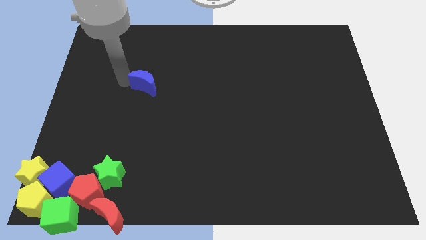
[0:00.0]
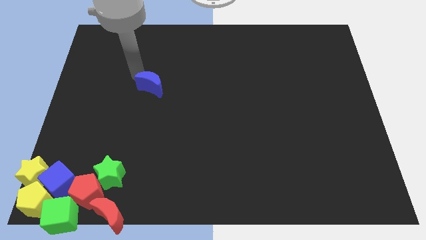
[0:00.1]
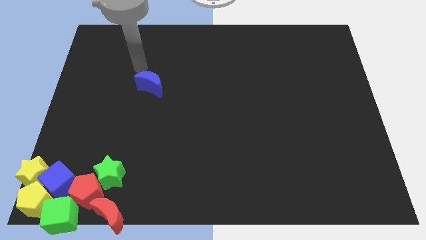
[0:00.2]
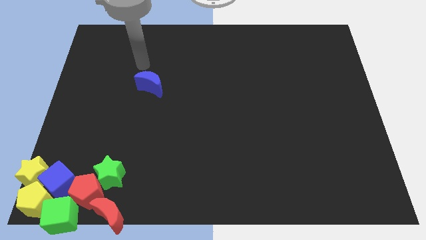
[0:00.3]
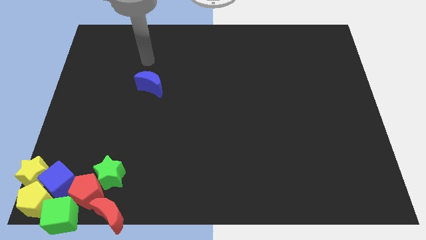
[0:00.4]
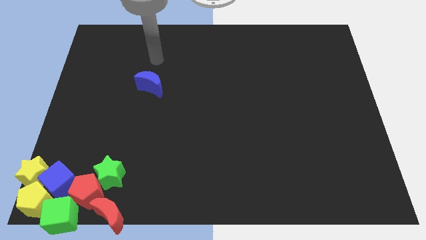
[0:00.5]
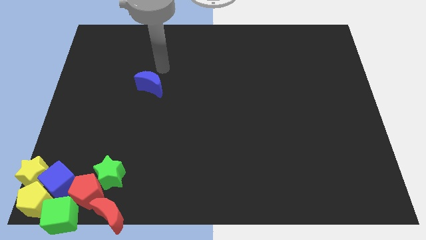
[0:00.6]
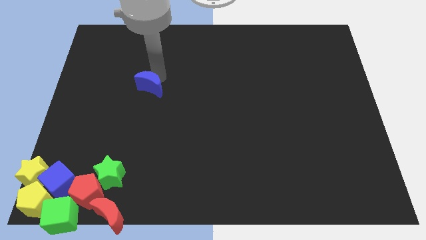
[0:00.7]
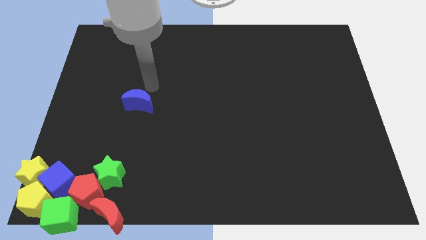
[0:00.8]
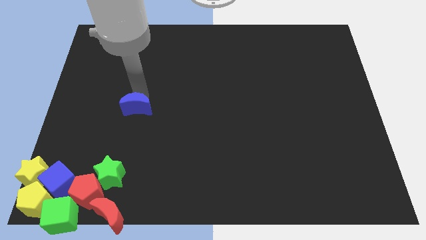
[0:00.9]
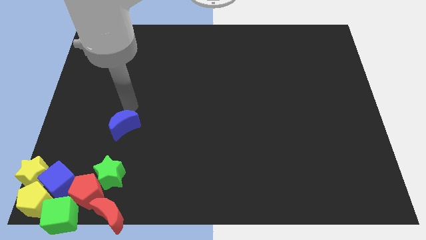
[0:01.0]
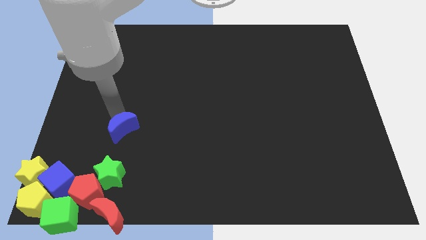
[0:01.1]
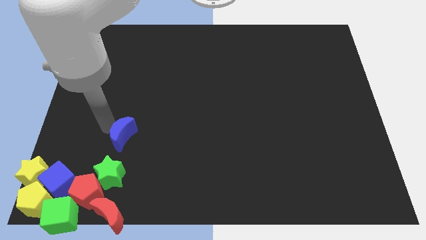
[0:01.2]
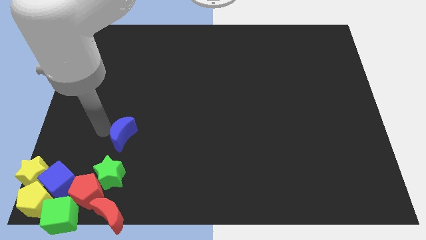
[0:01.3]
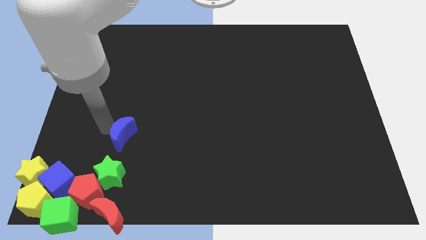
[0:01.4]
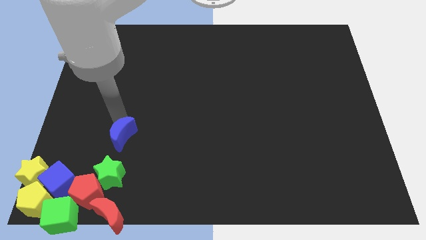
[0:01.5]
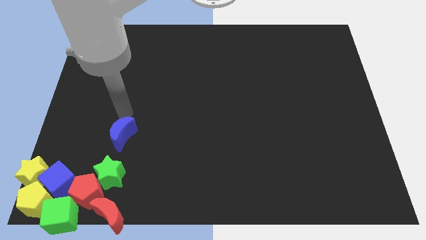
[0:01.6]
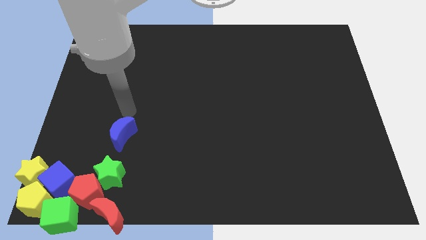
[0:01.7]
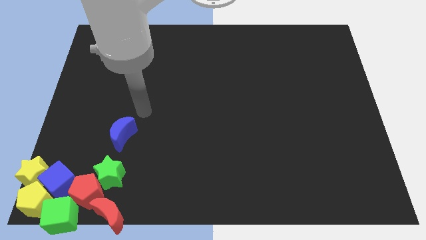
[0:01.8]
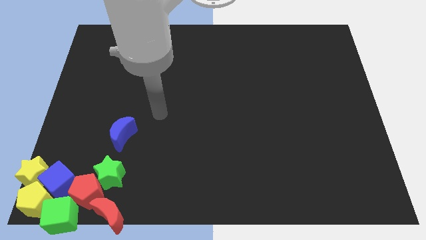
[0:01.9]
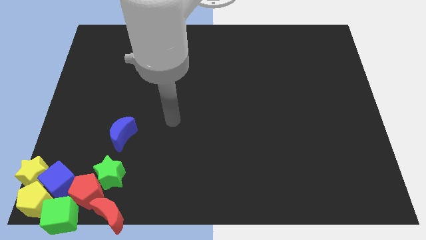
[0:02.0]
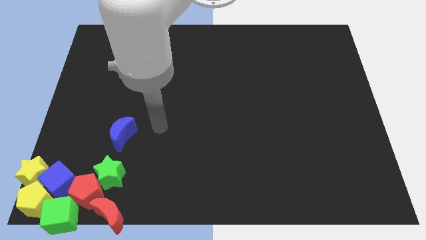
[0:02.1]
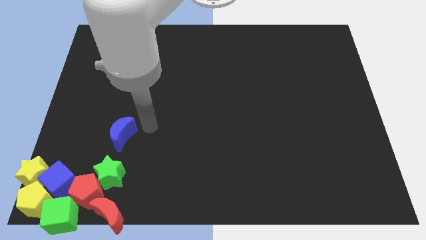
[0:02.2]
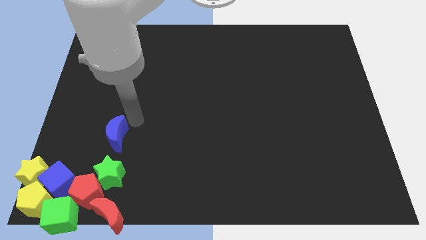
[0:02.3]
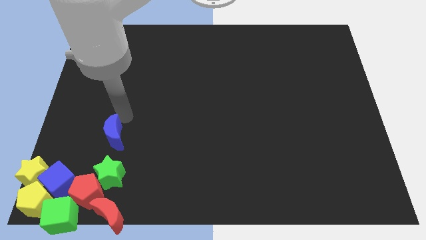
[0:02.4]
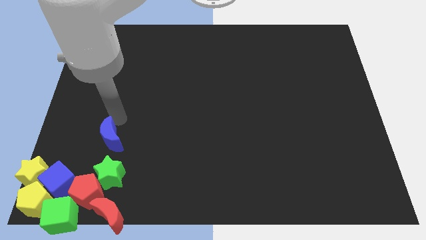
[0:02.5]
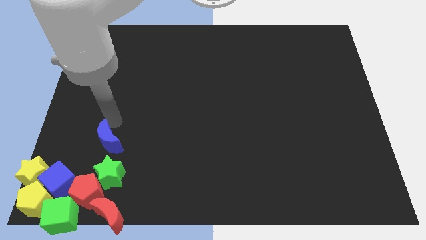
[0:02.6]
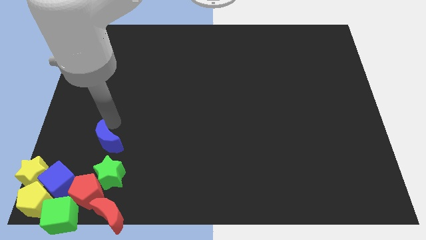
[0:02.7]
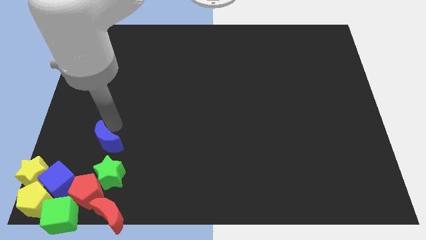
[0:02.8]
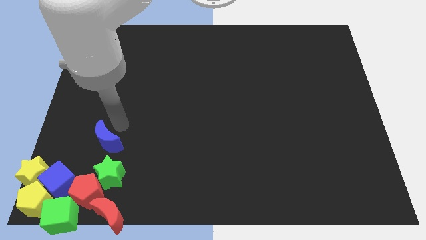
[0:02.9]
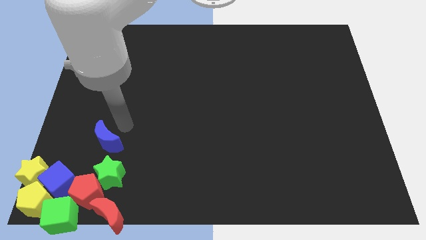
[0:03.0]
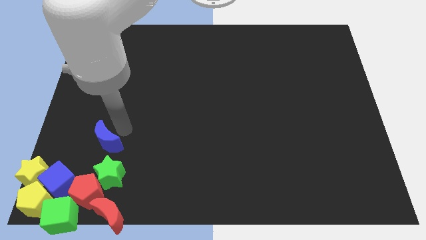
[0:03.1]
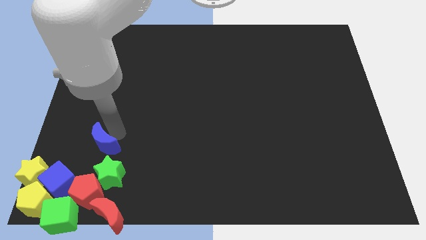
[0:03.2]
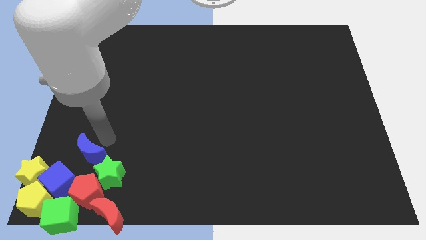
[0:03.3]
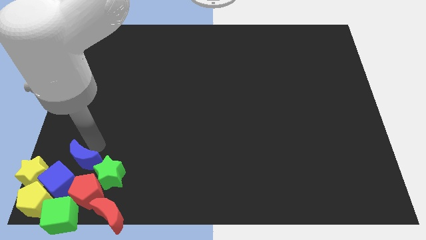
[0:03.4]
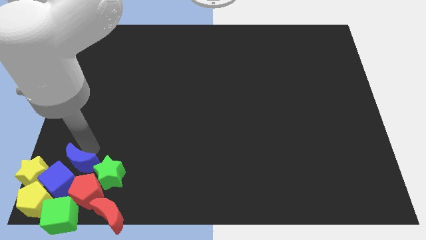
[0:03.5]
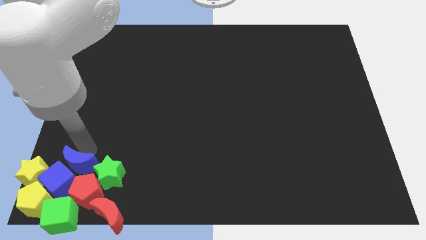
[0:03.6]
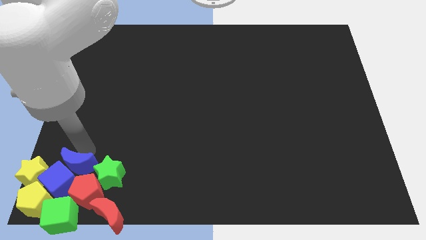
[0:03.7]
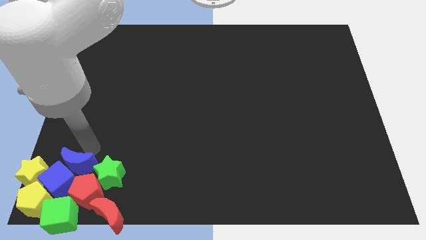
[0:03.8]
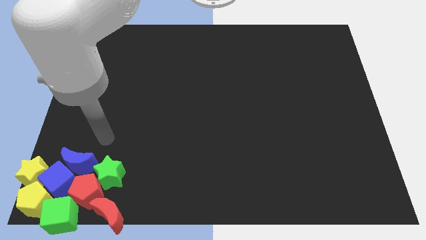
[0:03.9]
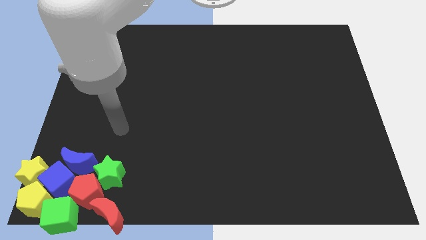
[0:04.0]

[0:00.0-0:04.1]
place the blue crescent into the group of blocks

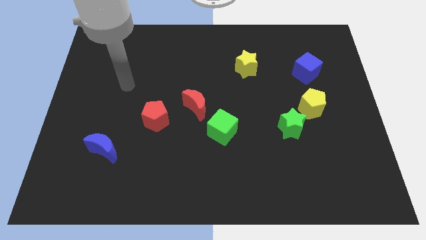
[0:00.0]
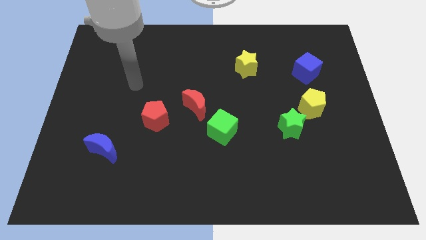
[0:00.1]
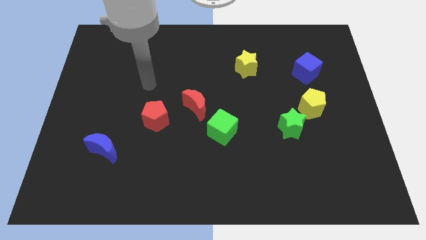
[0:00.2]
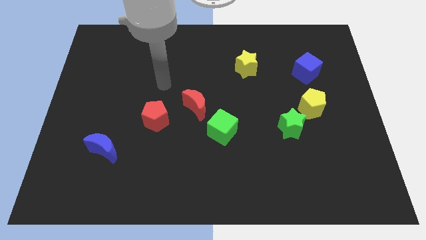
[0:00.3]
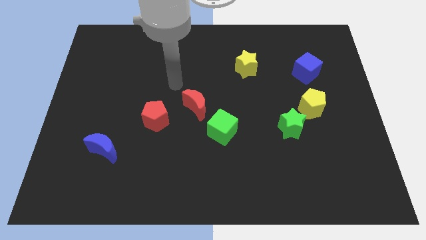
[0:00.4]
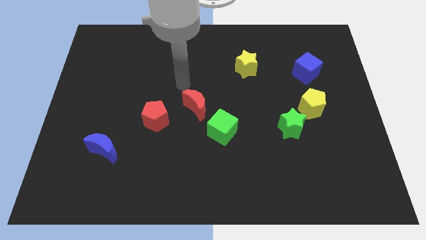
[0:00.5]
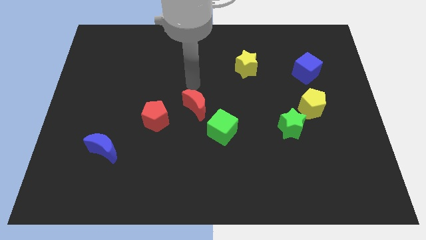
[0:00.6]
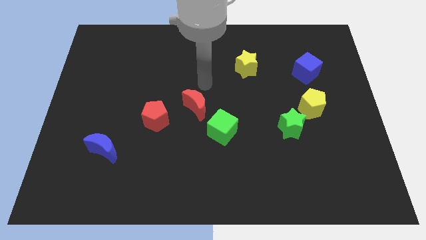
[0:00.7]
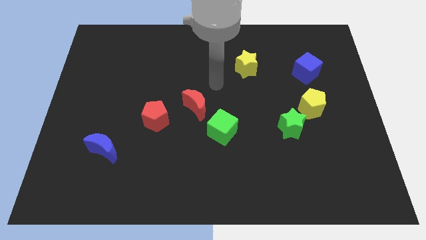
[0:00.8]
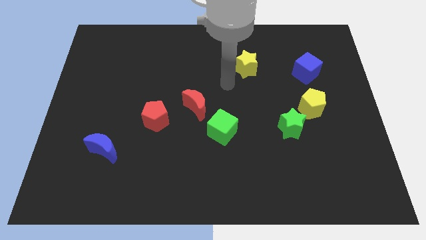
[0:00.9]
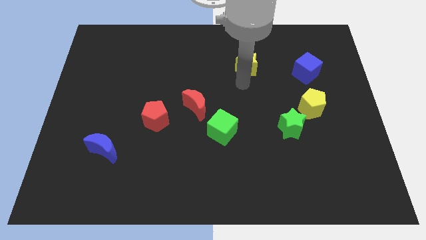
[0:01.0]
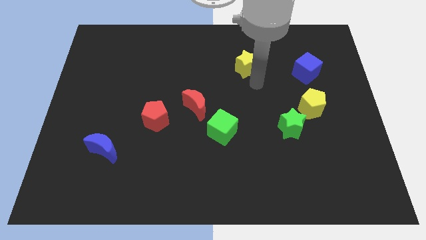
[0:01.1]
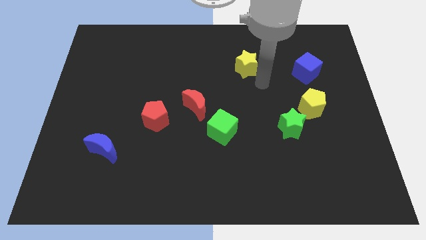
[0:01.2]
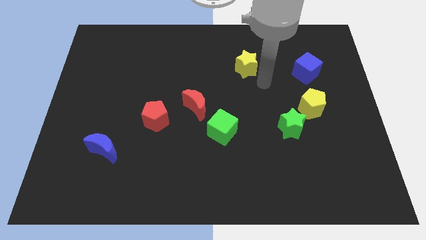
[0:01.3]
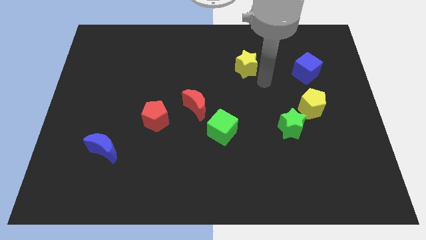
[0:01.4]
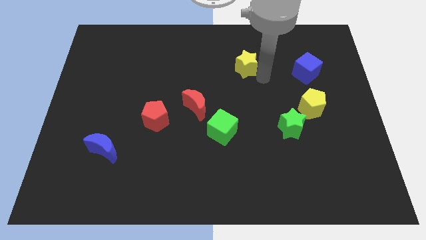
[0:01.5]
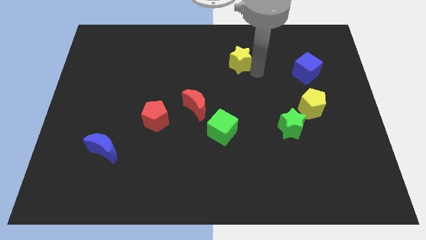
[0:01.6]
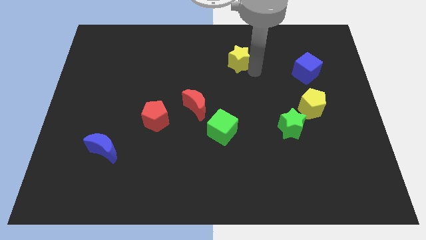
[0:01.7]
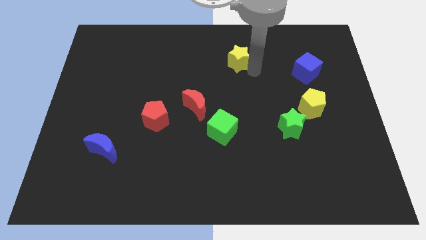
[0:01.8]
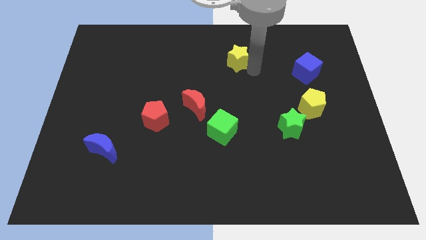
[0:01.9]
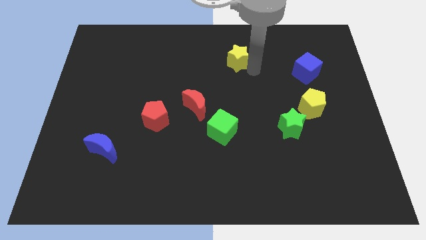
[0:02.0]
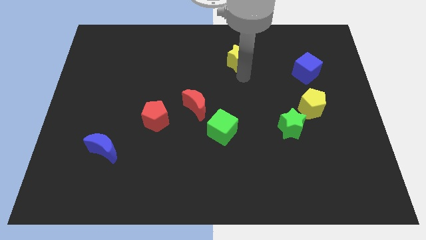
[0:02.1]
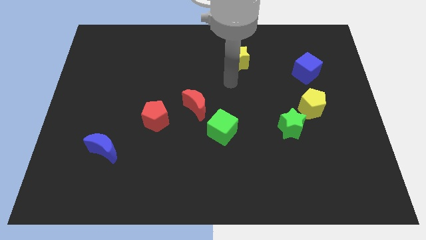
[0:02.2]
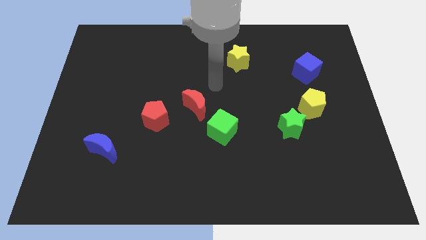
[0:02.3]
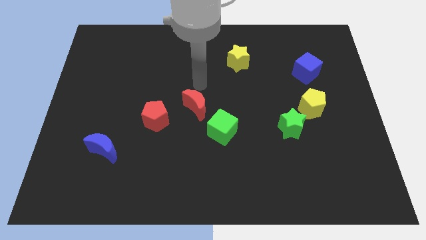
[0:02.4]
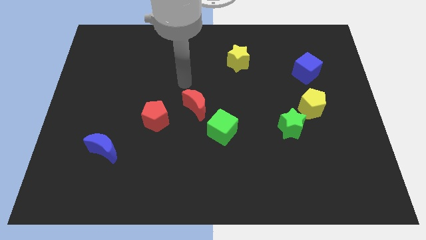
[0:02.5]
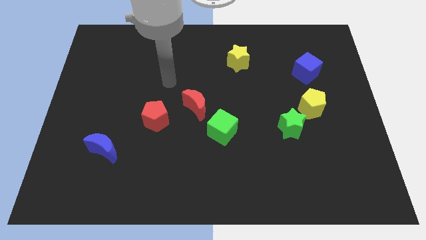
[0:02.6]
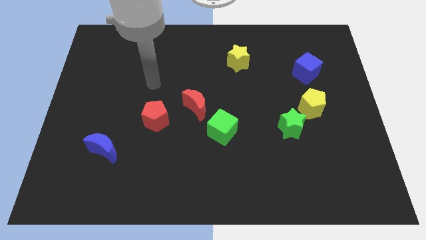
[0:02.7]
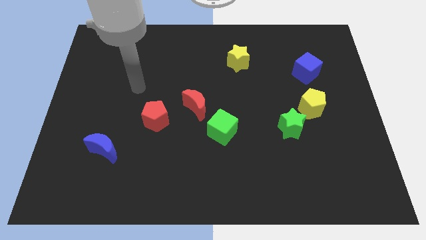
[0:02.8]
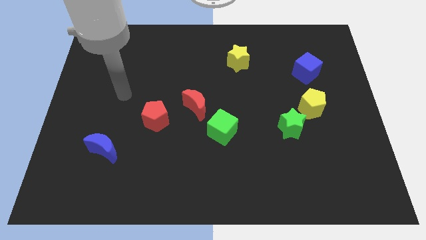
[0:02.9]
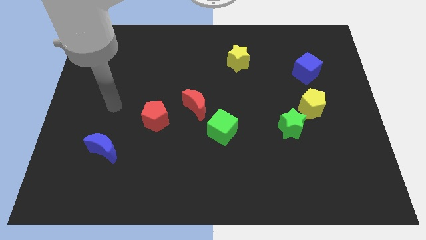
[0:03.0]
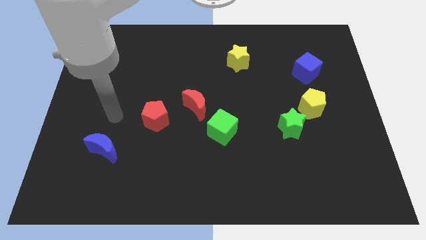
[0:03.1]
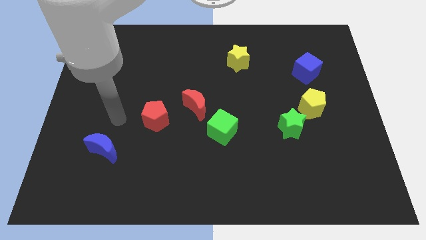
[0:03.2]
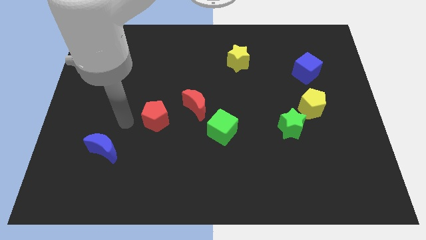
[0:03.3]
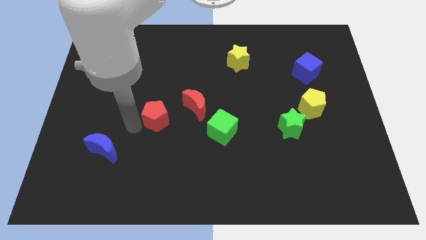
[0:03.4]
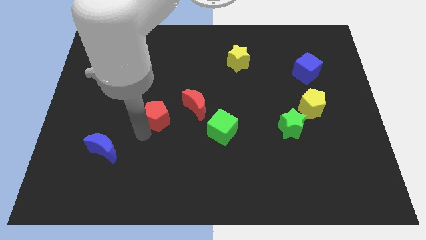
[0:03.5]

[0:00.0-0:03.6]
place your arm in between red pentagon and blue moon

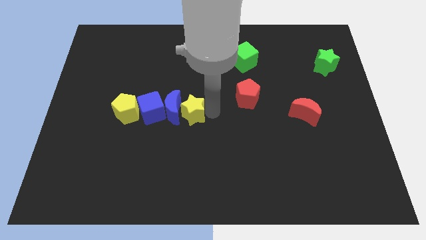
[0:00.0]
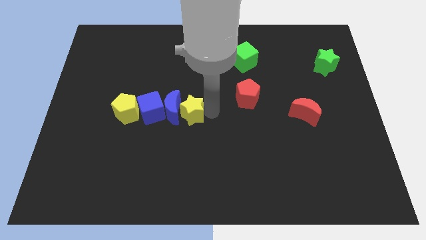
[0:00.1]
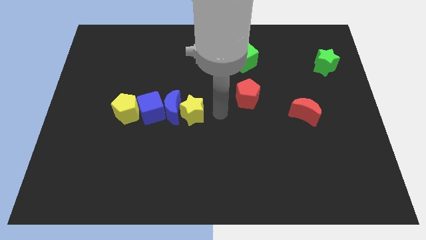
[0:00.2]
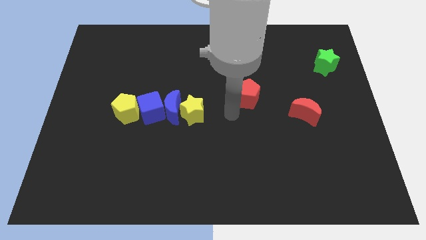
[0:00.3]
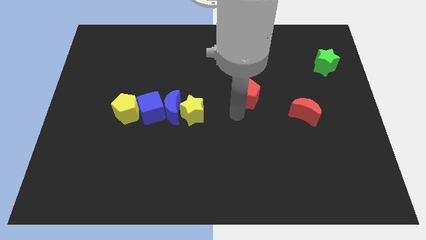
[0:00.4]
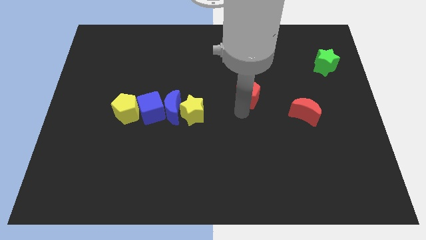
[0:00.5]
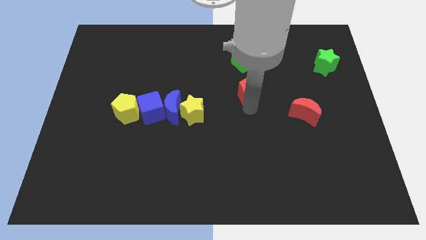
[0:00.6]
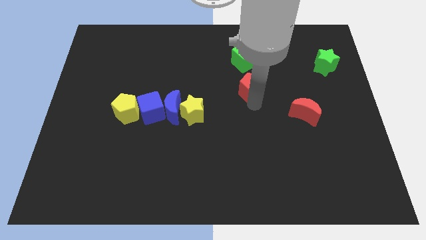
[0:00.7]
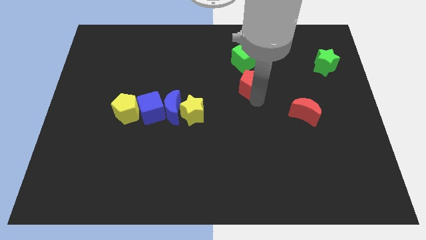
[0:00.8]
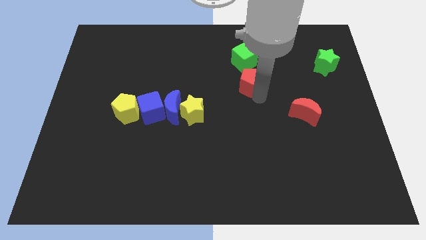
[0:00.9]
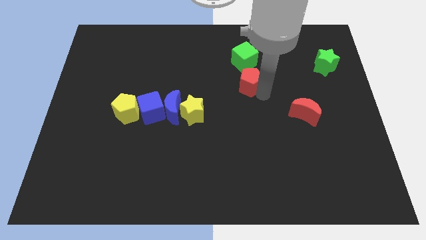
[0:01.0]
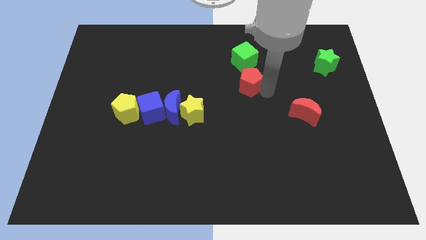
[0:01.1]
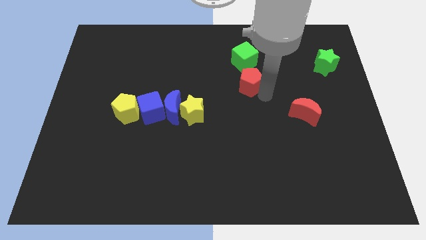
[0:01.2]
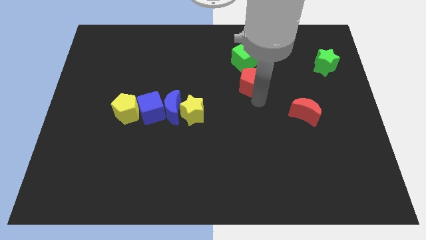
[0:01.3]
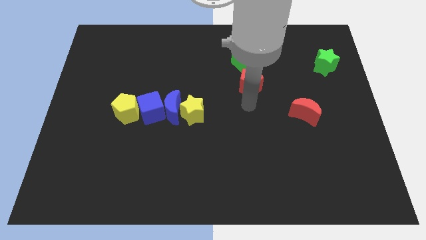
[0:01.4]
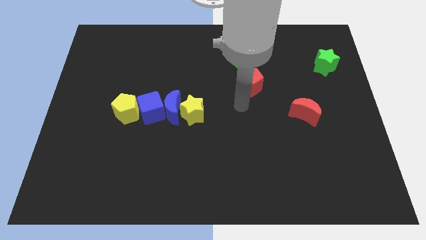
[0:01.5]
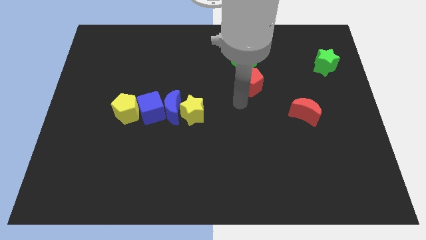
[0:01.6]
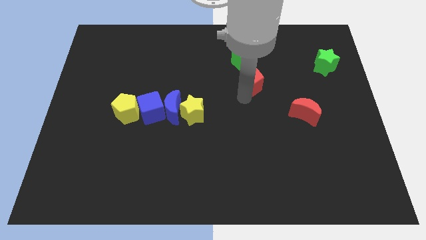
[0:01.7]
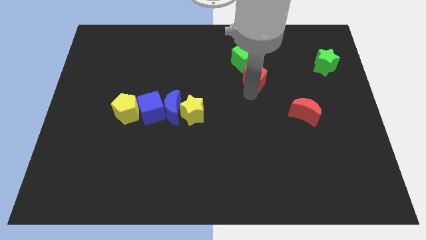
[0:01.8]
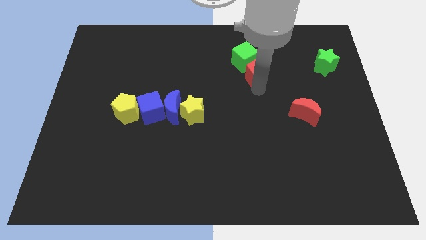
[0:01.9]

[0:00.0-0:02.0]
move the red pentagon close to the green cube
